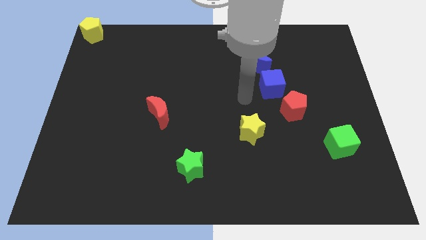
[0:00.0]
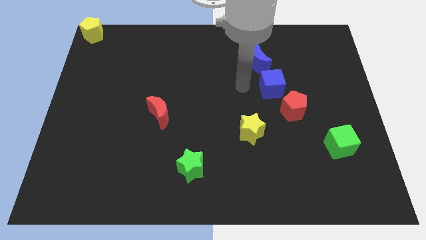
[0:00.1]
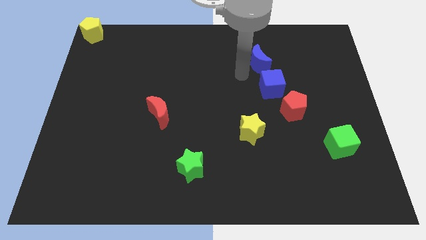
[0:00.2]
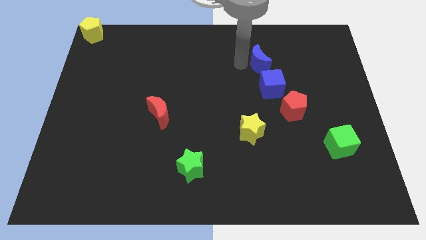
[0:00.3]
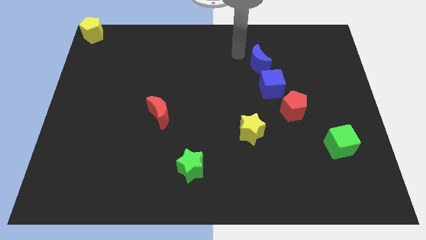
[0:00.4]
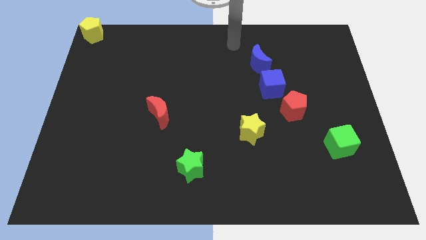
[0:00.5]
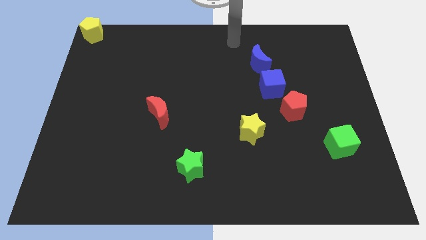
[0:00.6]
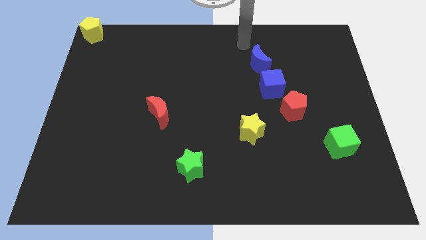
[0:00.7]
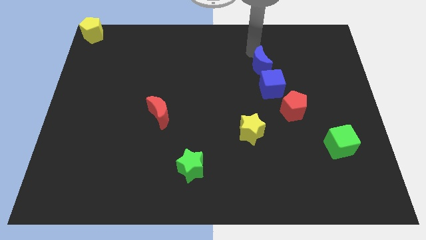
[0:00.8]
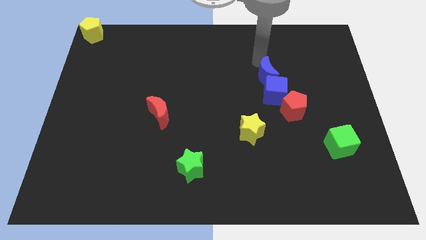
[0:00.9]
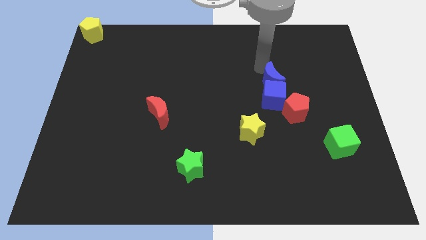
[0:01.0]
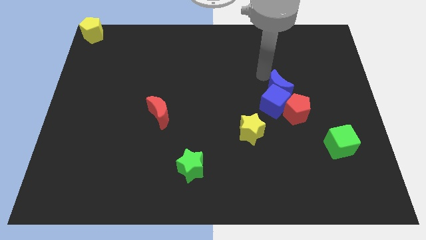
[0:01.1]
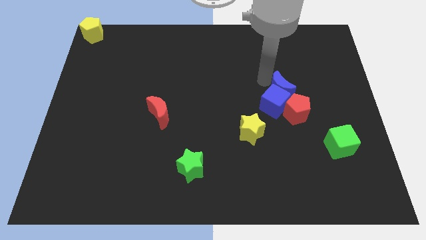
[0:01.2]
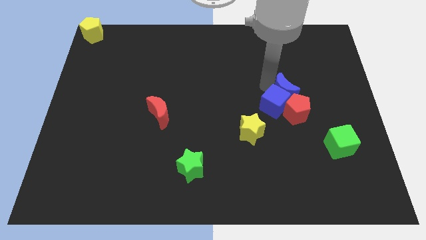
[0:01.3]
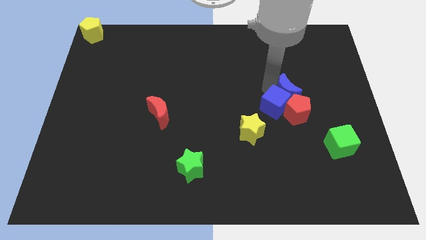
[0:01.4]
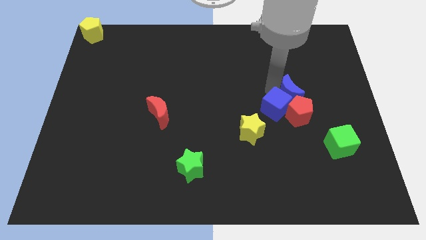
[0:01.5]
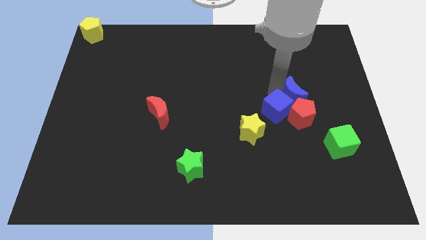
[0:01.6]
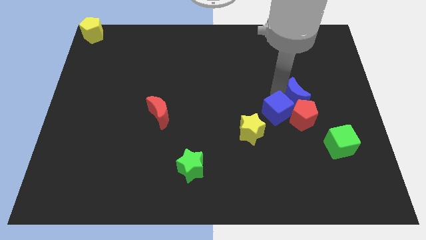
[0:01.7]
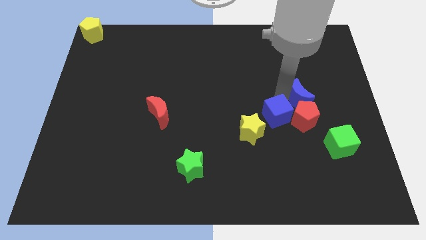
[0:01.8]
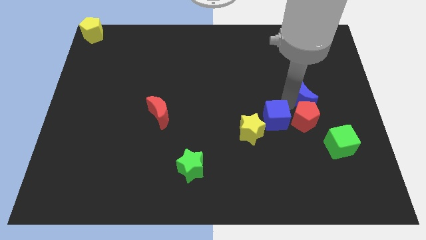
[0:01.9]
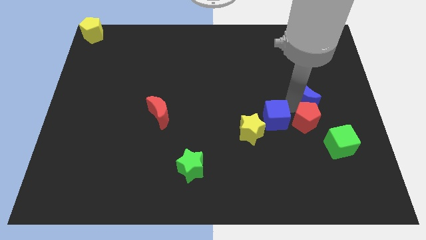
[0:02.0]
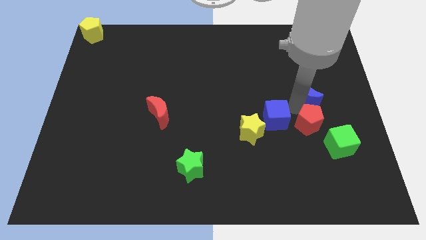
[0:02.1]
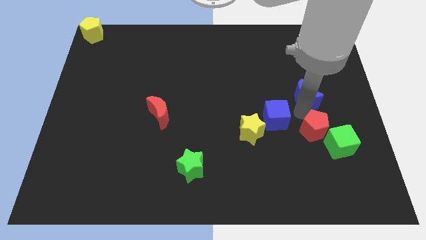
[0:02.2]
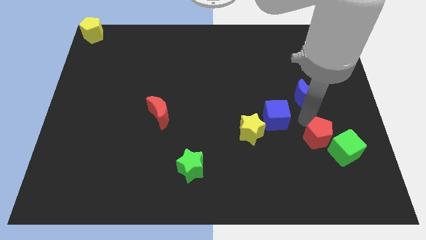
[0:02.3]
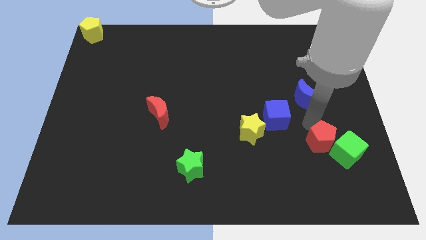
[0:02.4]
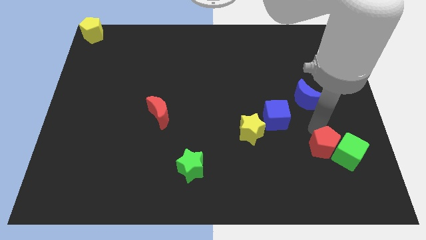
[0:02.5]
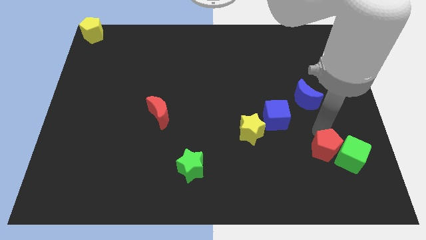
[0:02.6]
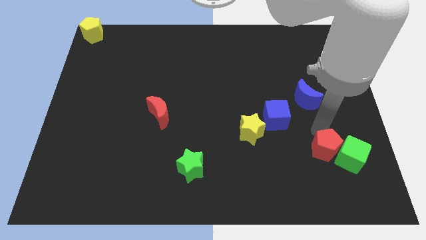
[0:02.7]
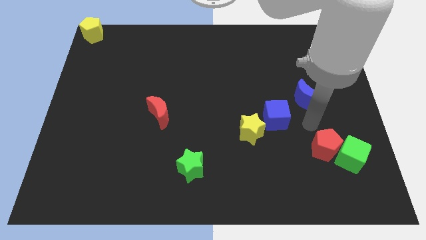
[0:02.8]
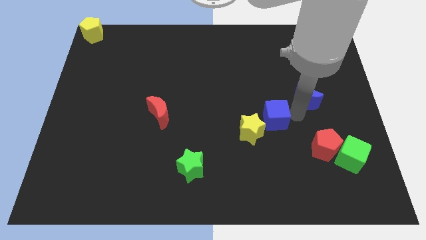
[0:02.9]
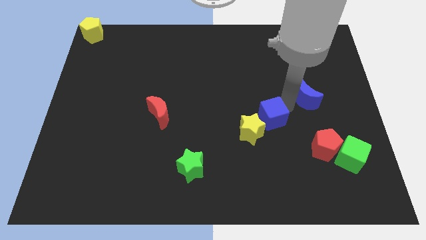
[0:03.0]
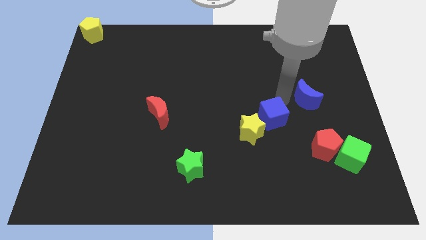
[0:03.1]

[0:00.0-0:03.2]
push red pentagon in green cube

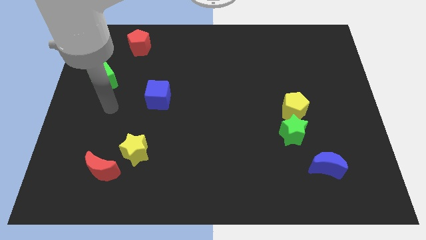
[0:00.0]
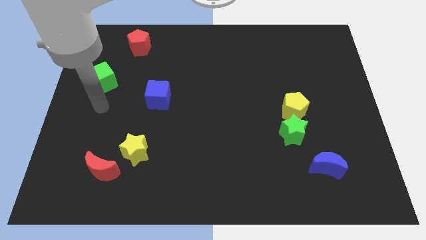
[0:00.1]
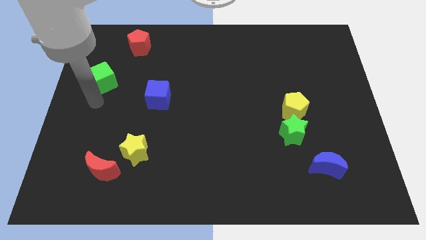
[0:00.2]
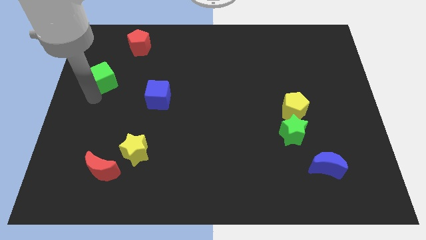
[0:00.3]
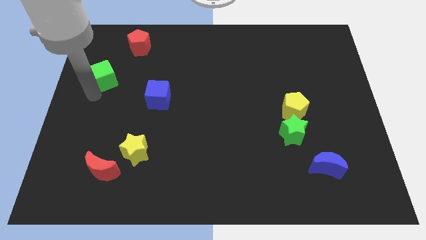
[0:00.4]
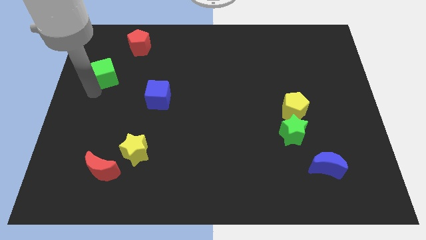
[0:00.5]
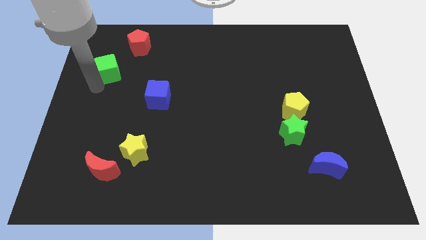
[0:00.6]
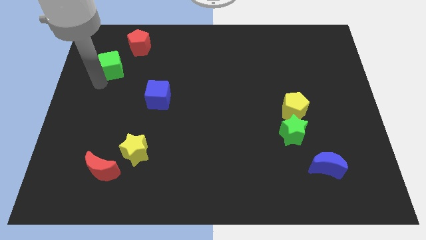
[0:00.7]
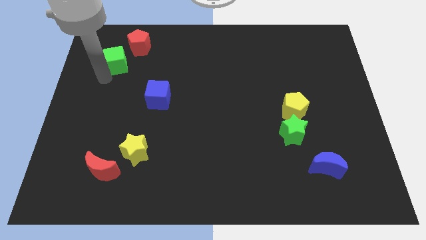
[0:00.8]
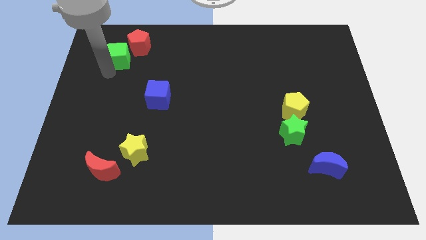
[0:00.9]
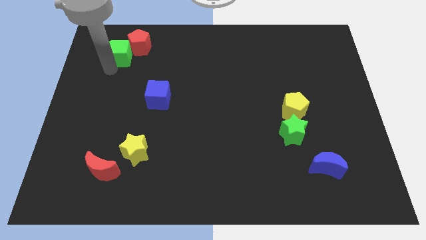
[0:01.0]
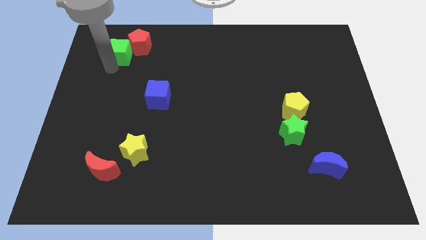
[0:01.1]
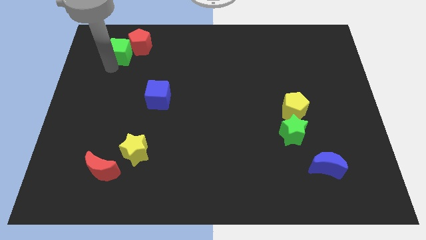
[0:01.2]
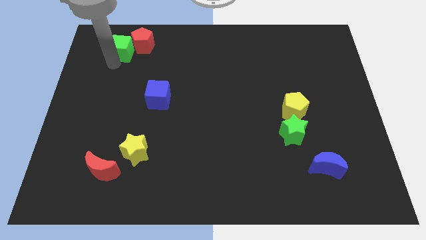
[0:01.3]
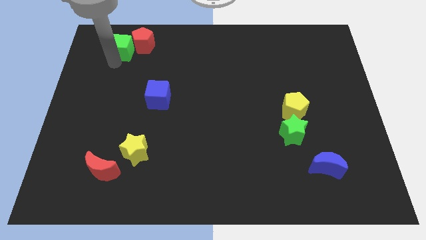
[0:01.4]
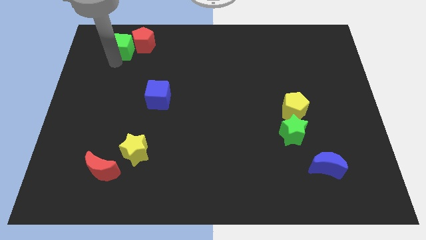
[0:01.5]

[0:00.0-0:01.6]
move the green cube into the red pentagon

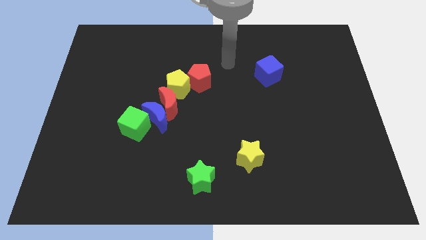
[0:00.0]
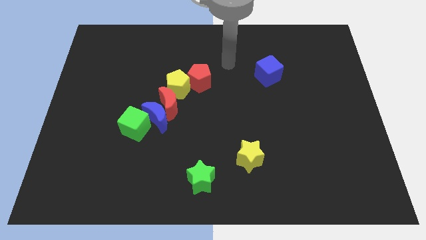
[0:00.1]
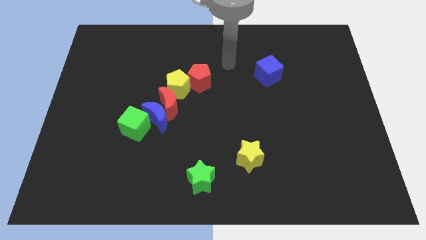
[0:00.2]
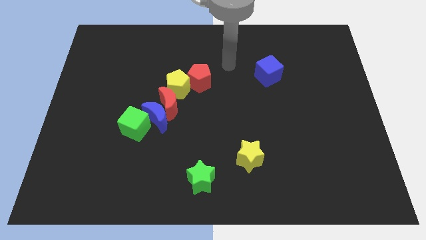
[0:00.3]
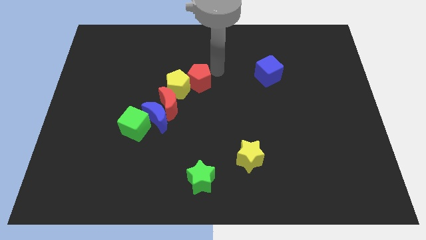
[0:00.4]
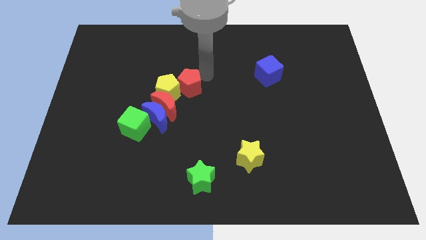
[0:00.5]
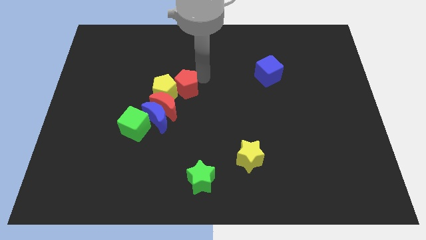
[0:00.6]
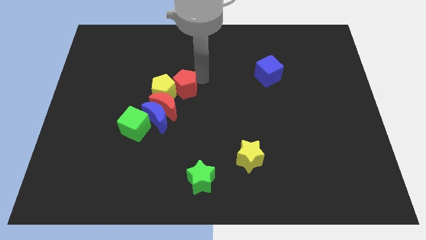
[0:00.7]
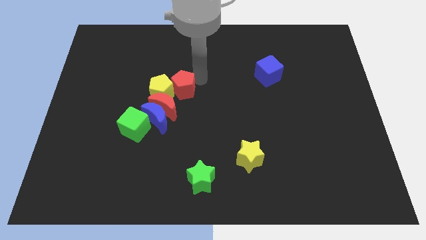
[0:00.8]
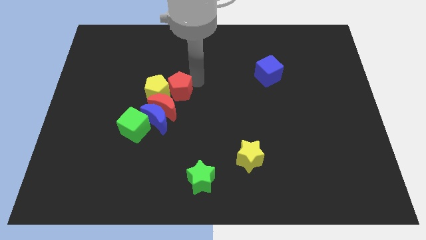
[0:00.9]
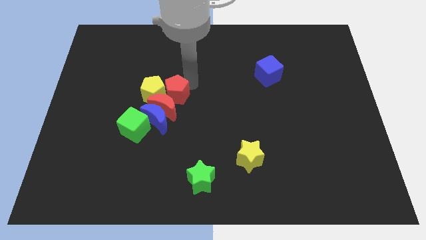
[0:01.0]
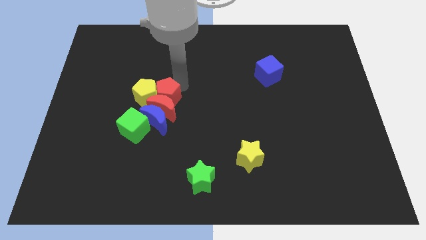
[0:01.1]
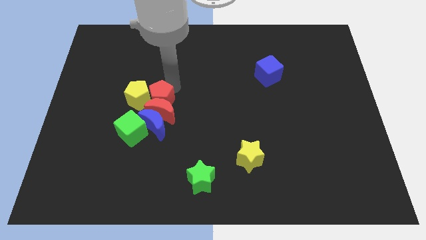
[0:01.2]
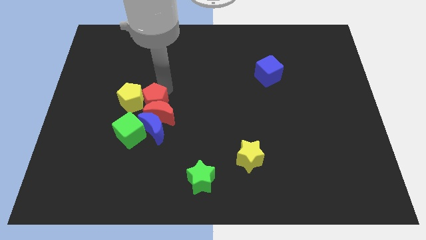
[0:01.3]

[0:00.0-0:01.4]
push the red pentagon slightly towards the bottom left corner

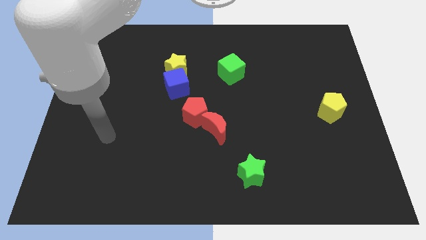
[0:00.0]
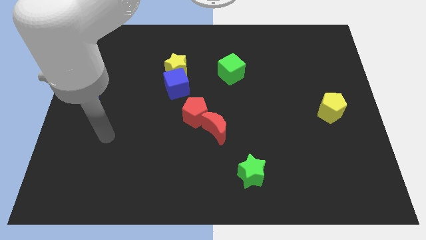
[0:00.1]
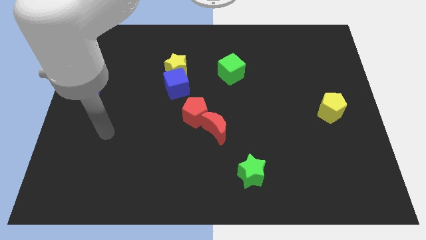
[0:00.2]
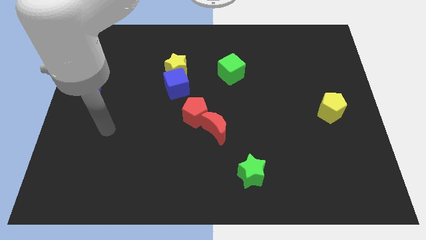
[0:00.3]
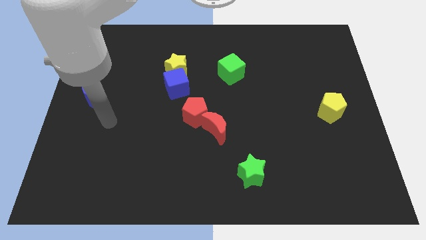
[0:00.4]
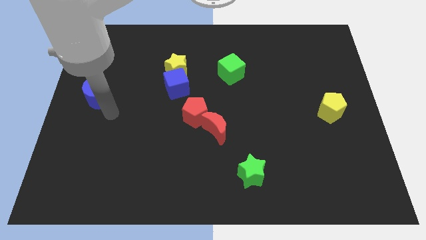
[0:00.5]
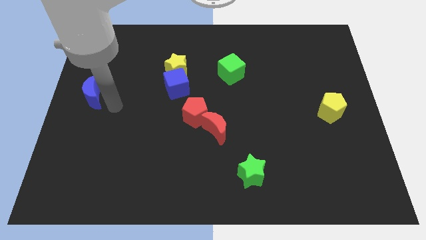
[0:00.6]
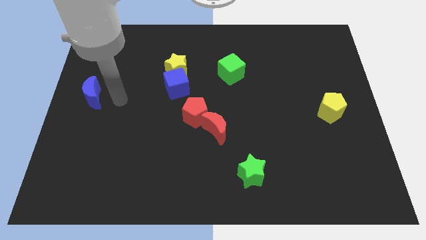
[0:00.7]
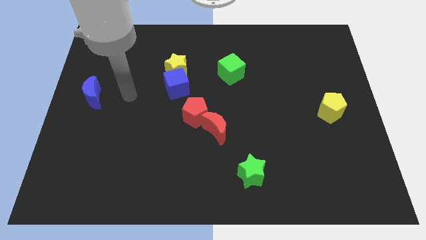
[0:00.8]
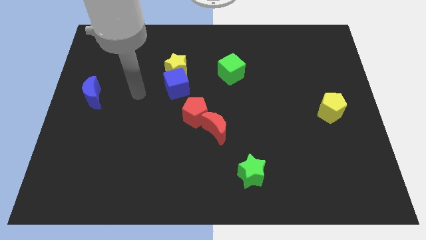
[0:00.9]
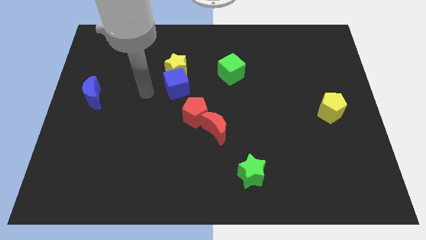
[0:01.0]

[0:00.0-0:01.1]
move the arm towards the left of the blue cube

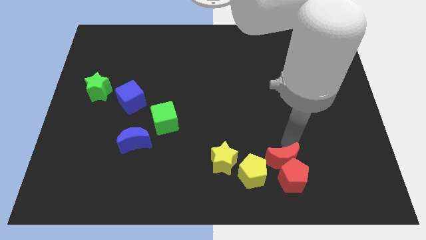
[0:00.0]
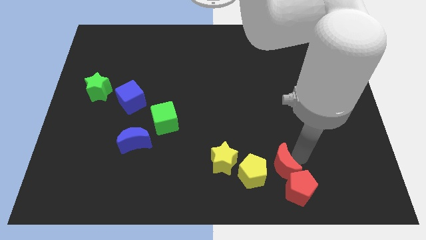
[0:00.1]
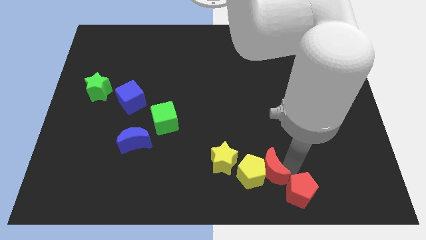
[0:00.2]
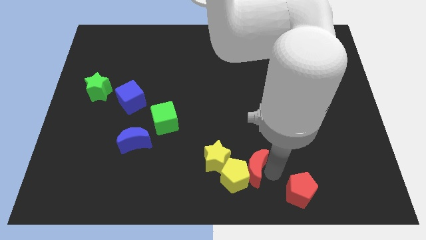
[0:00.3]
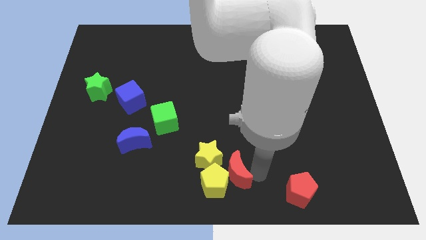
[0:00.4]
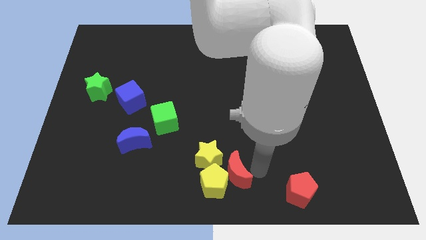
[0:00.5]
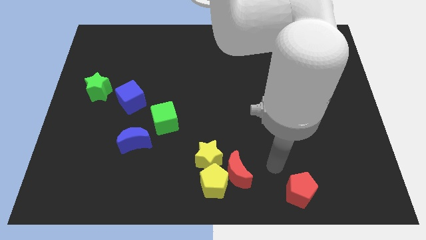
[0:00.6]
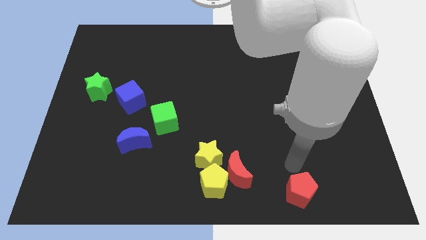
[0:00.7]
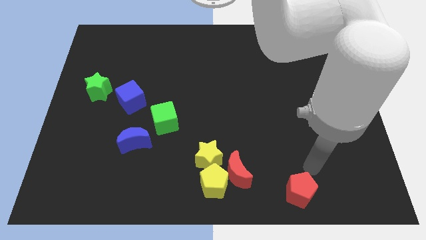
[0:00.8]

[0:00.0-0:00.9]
separate red blocks

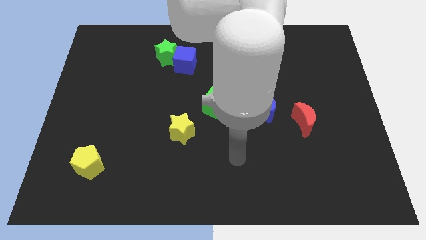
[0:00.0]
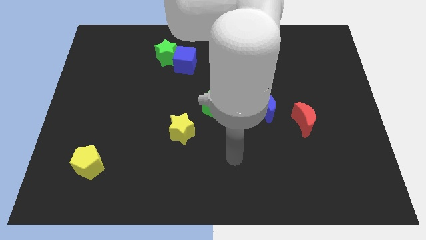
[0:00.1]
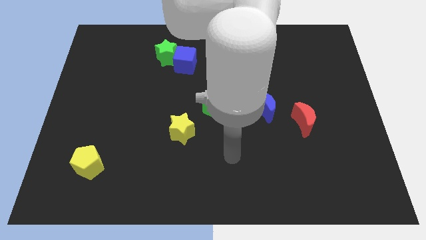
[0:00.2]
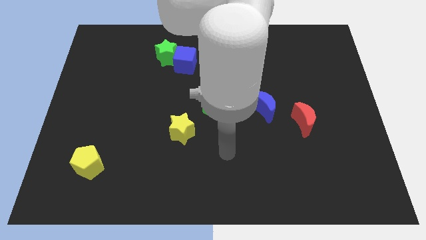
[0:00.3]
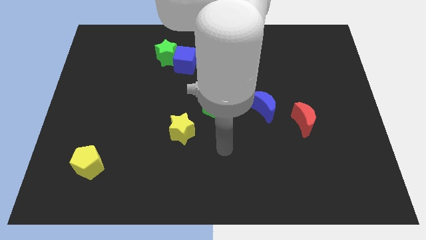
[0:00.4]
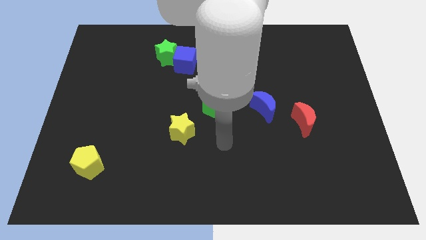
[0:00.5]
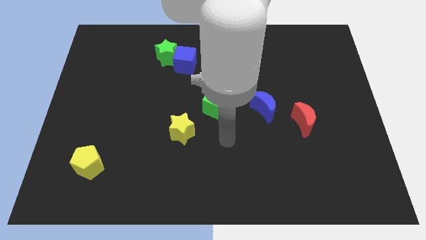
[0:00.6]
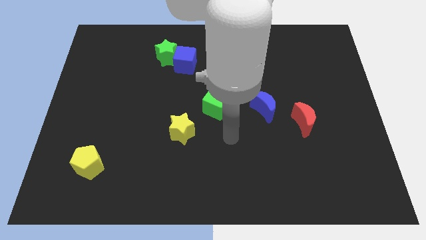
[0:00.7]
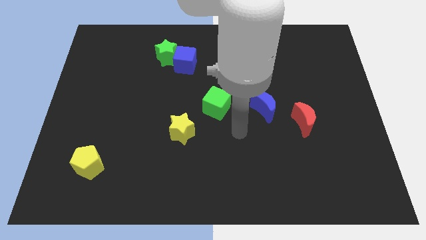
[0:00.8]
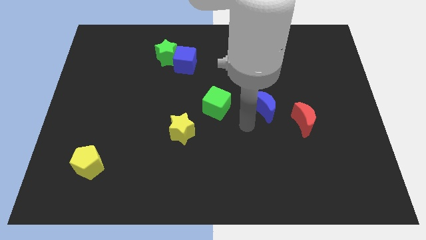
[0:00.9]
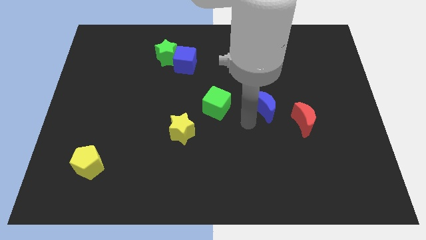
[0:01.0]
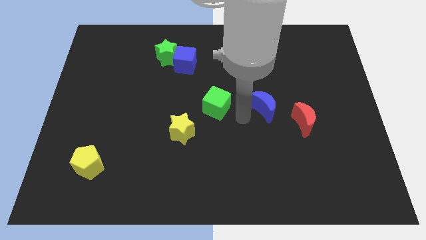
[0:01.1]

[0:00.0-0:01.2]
place the arm between the green cube and the blue moon
